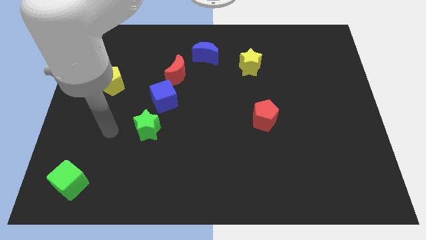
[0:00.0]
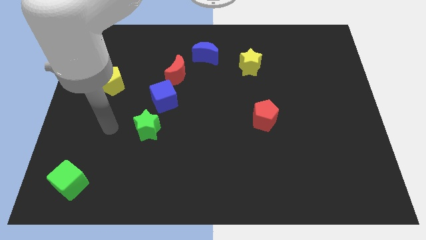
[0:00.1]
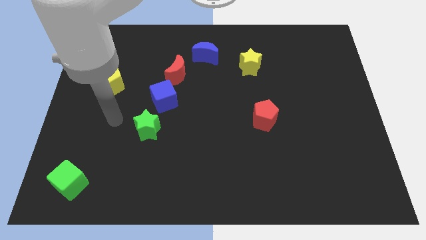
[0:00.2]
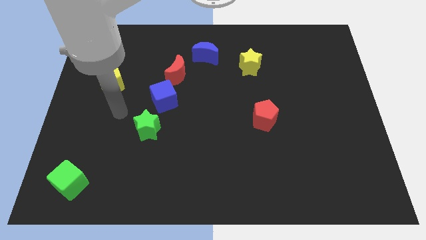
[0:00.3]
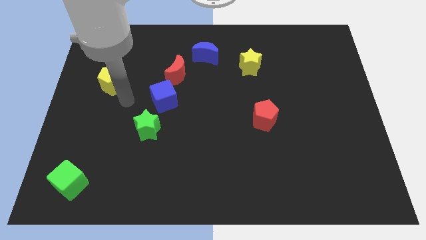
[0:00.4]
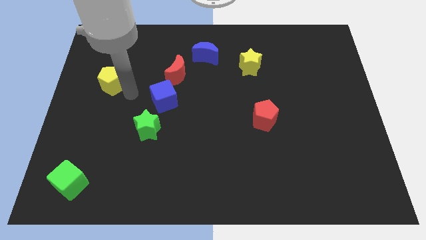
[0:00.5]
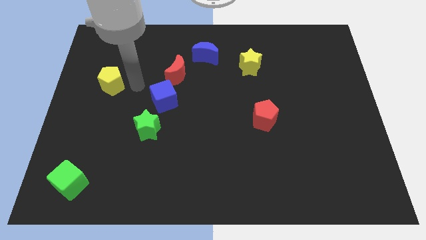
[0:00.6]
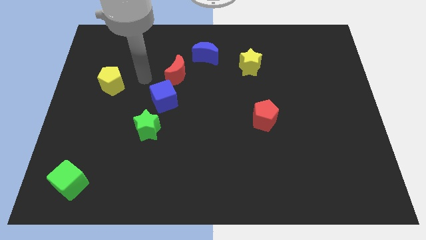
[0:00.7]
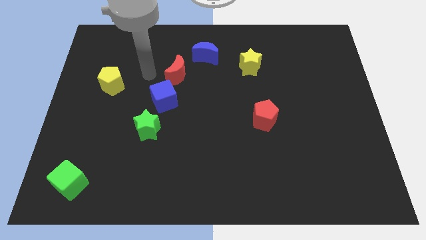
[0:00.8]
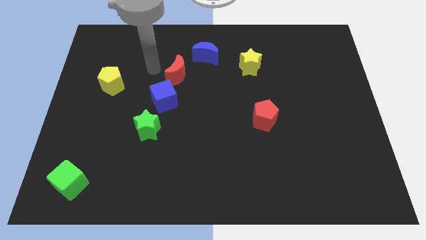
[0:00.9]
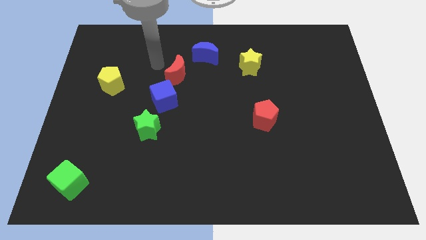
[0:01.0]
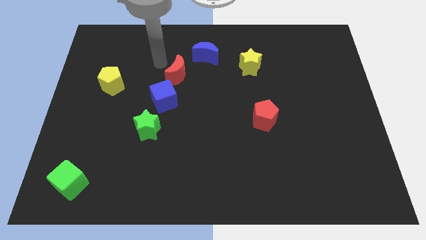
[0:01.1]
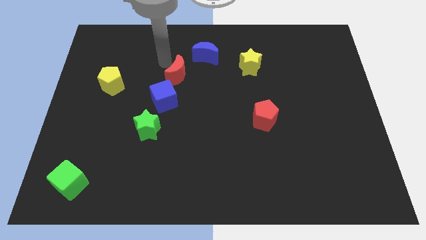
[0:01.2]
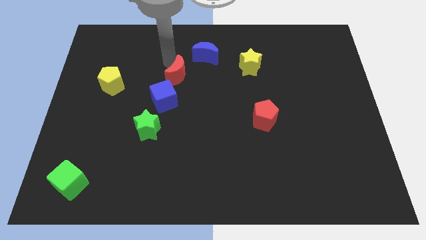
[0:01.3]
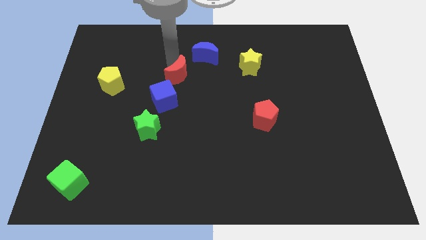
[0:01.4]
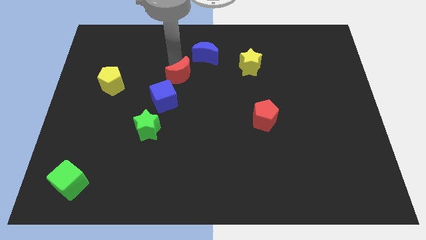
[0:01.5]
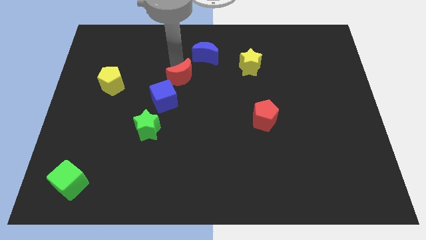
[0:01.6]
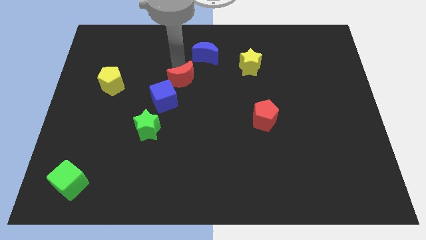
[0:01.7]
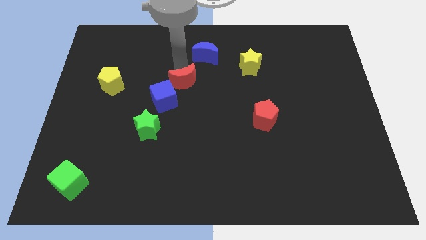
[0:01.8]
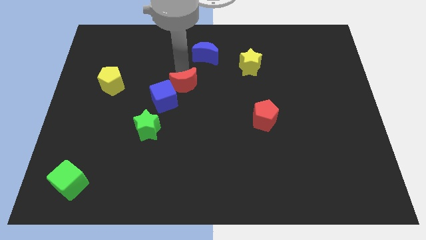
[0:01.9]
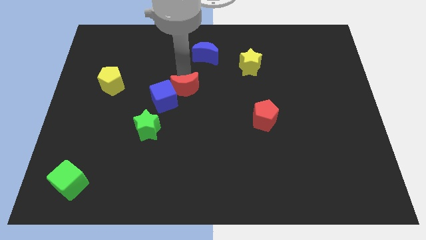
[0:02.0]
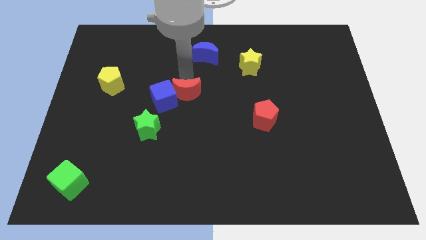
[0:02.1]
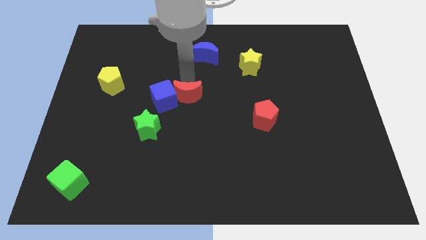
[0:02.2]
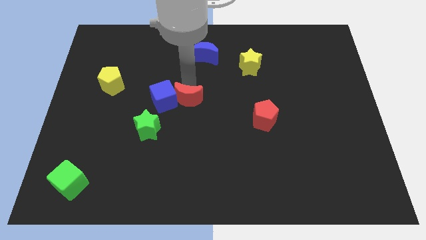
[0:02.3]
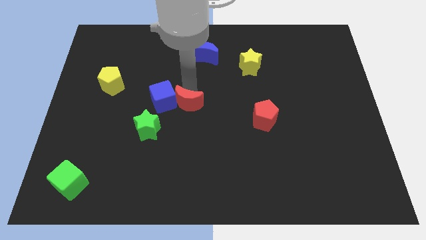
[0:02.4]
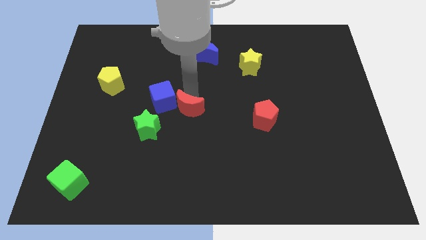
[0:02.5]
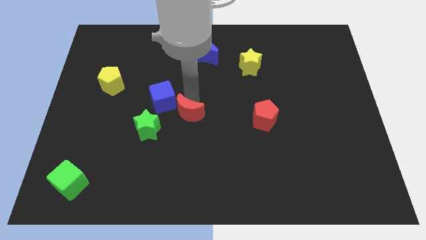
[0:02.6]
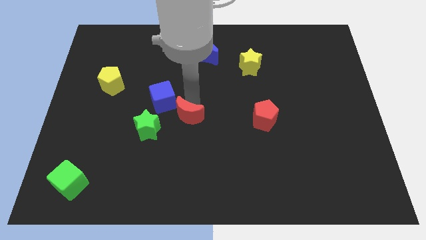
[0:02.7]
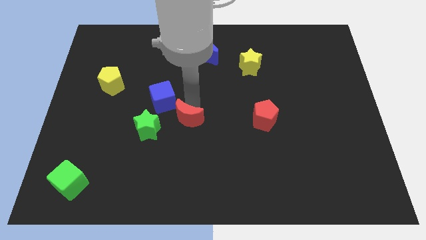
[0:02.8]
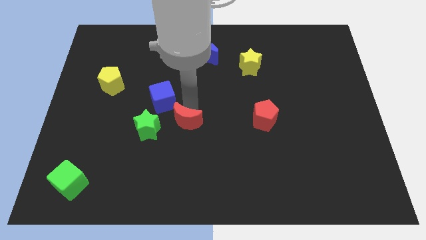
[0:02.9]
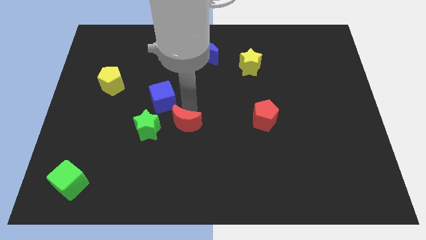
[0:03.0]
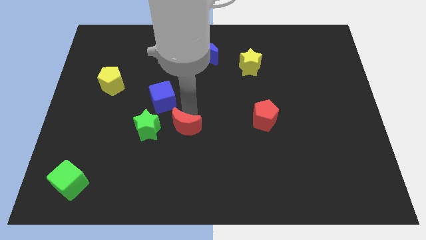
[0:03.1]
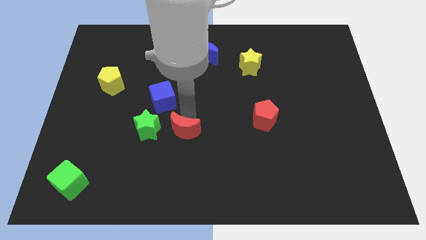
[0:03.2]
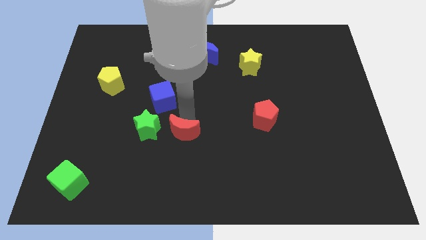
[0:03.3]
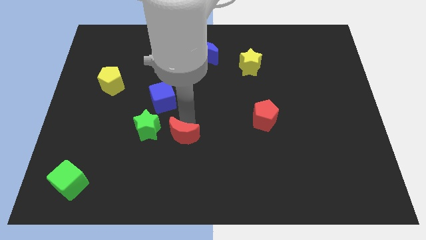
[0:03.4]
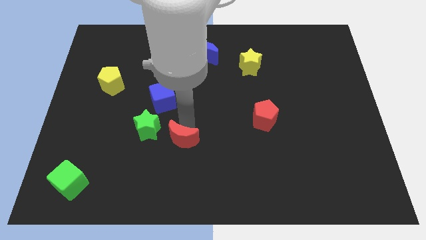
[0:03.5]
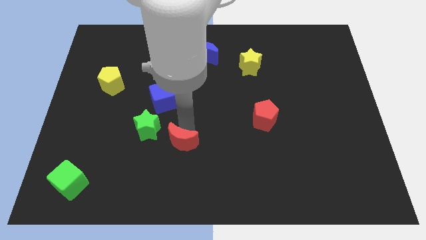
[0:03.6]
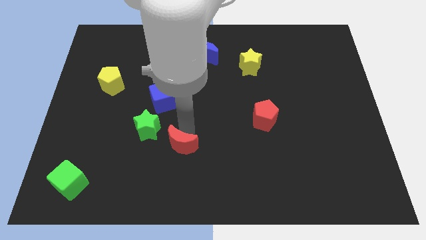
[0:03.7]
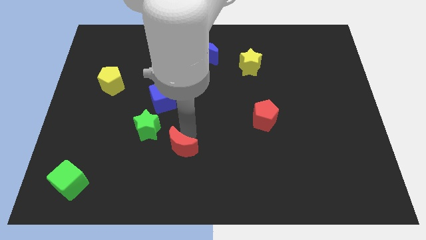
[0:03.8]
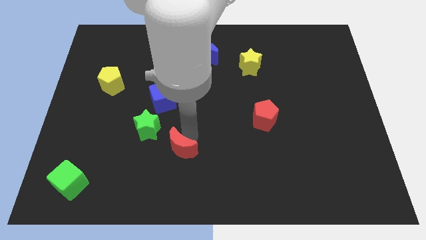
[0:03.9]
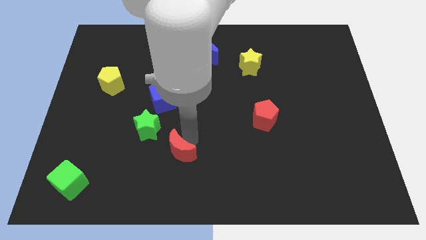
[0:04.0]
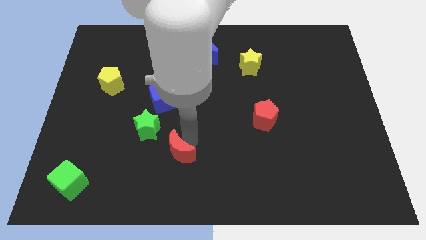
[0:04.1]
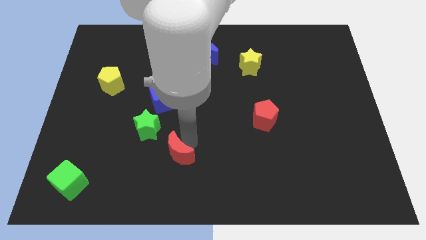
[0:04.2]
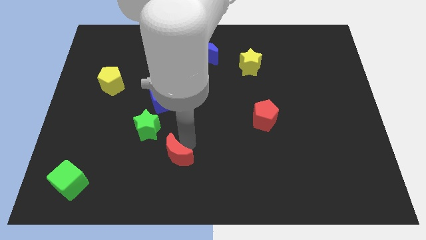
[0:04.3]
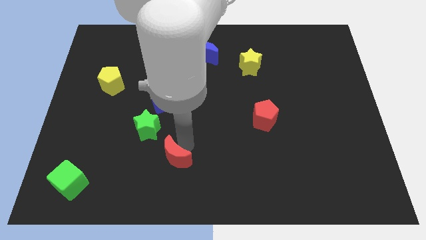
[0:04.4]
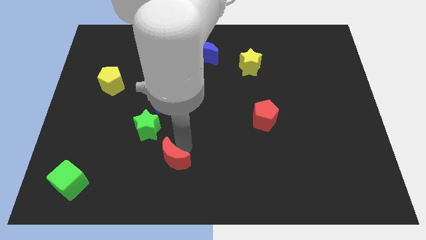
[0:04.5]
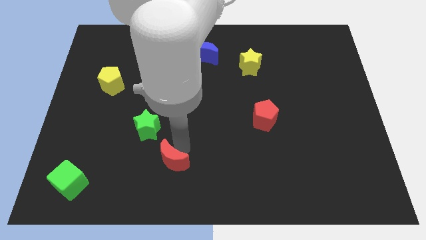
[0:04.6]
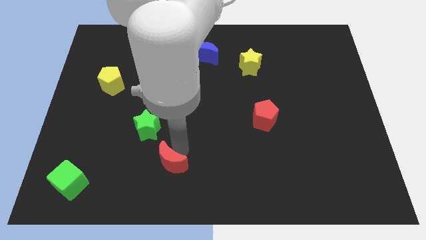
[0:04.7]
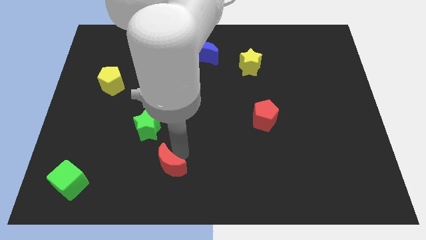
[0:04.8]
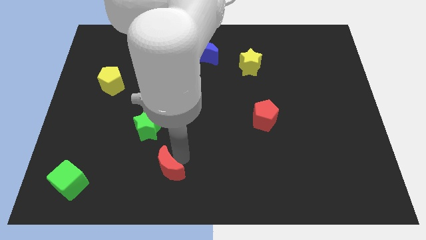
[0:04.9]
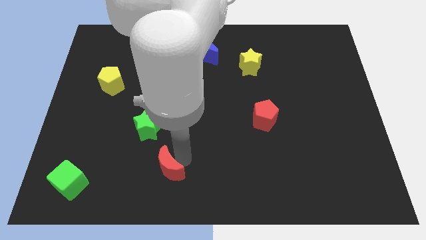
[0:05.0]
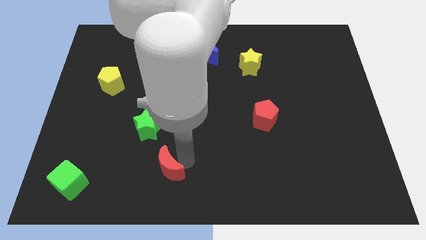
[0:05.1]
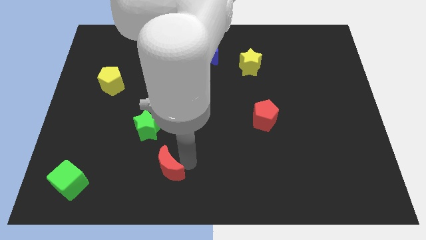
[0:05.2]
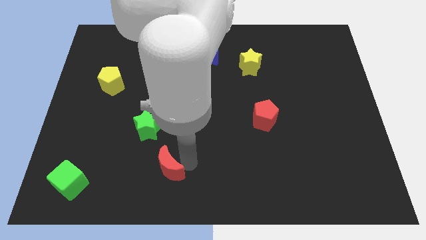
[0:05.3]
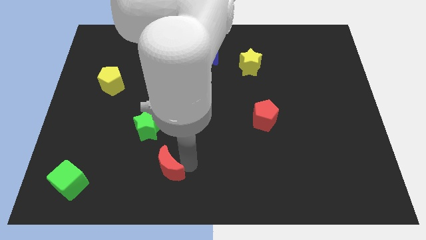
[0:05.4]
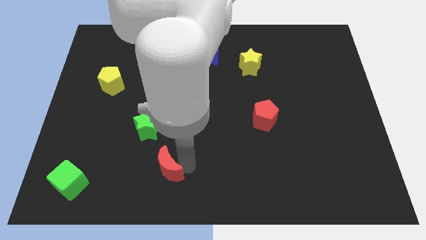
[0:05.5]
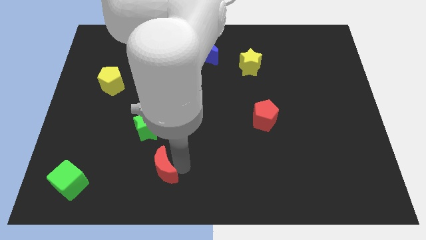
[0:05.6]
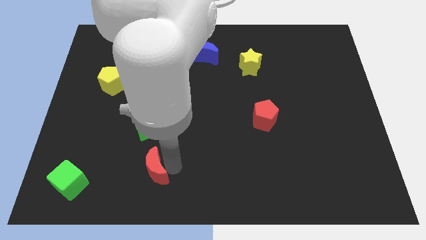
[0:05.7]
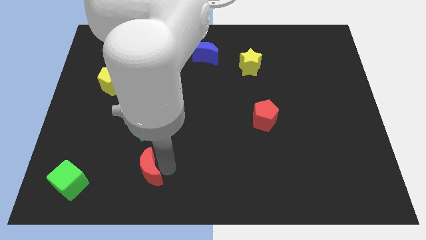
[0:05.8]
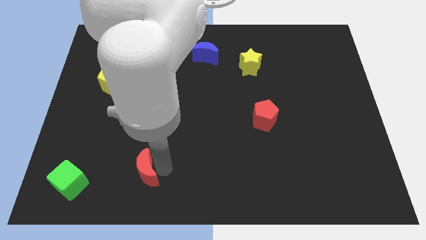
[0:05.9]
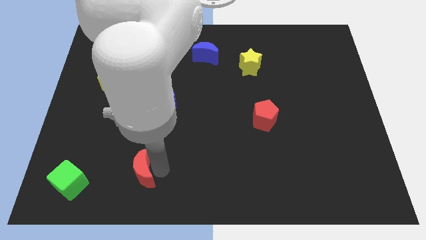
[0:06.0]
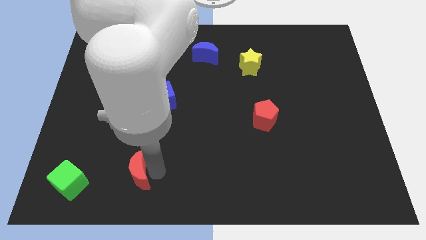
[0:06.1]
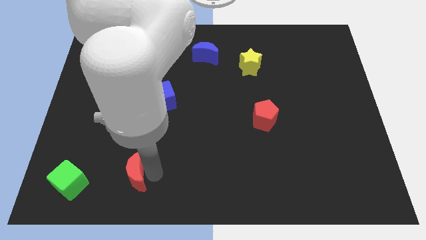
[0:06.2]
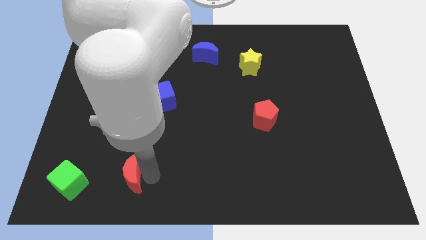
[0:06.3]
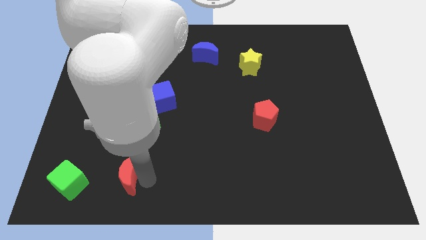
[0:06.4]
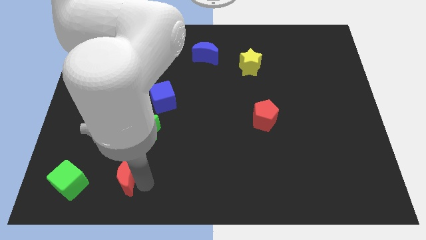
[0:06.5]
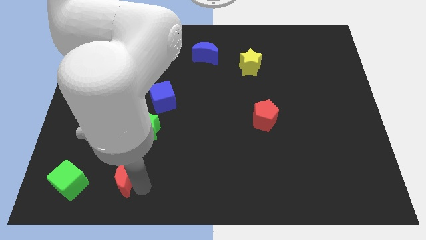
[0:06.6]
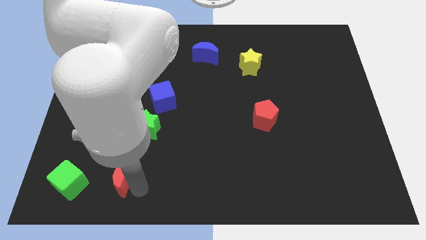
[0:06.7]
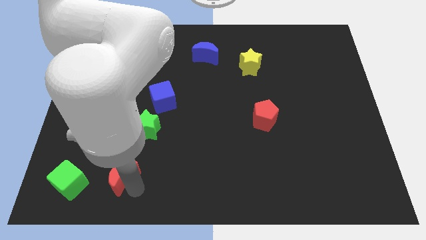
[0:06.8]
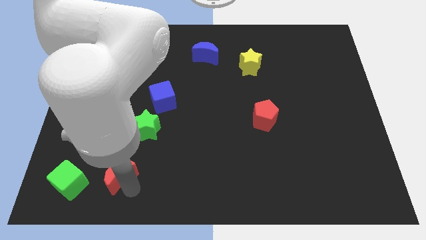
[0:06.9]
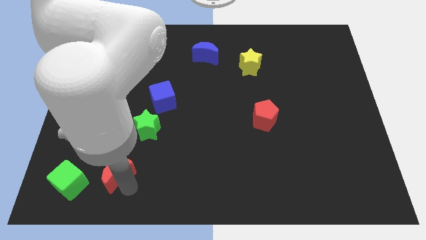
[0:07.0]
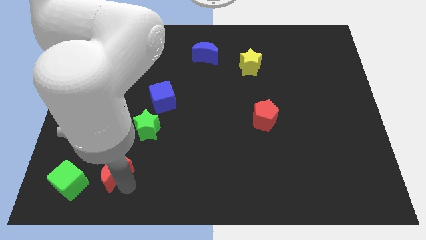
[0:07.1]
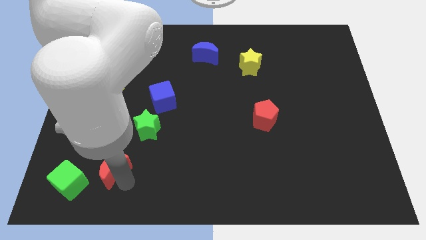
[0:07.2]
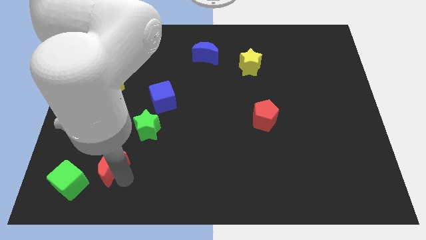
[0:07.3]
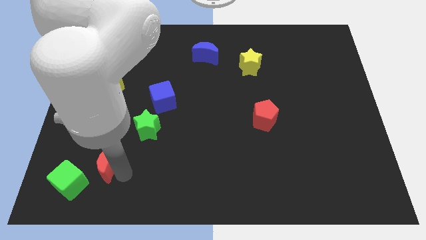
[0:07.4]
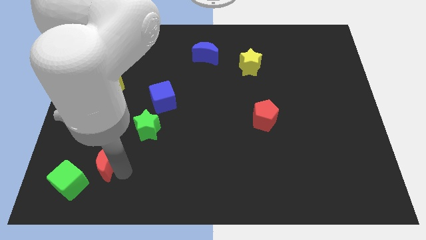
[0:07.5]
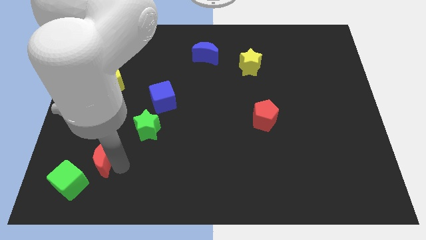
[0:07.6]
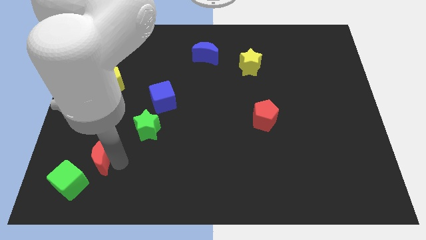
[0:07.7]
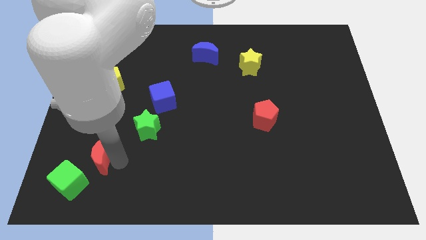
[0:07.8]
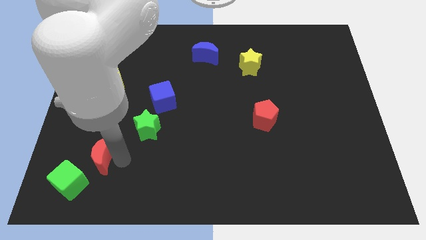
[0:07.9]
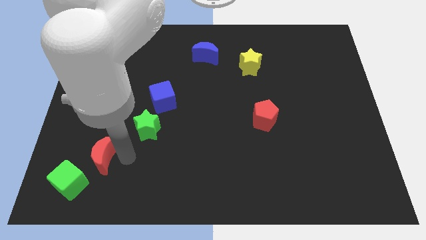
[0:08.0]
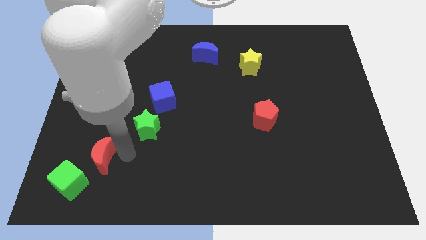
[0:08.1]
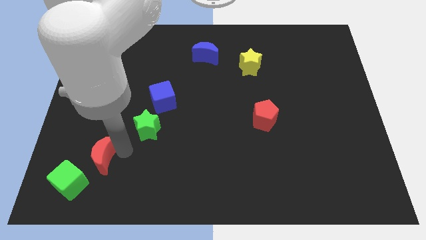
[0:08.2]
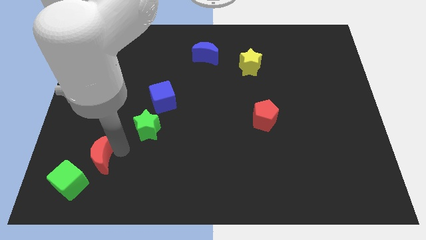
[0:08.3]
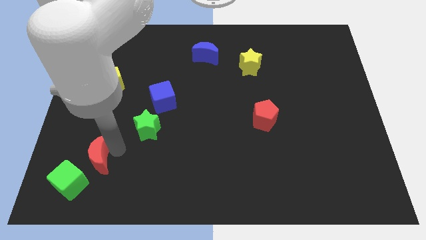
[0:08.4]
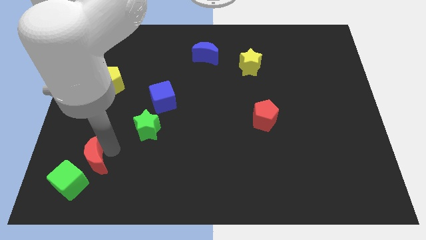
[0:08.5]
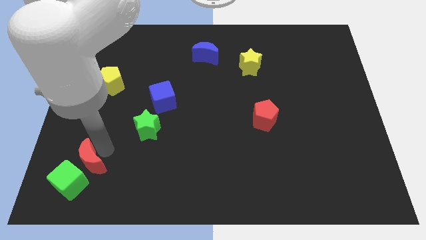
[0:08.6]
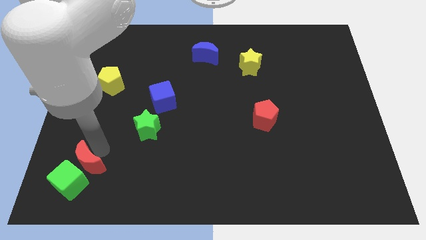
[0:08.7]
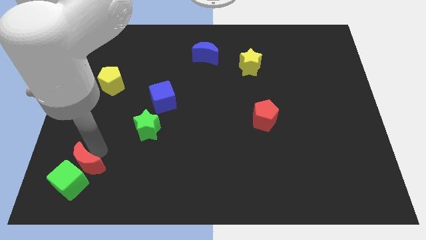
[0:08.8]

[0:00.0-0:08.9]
push the red moon close to the green cube
